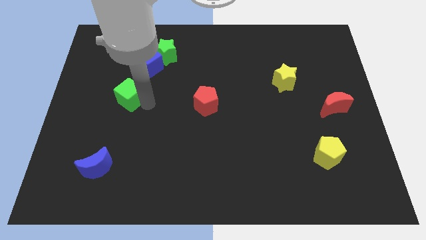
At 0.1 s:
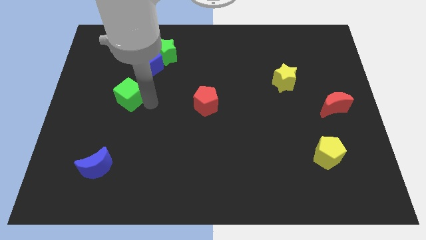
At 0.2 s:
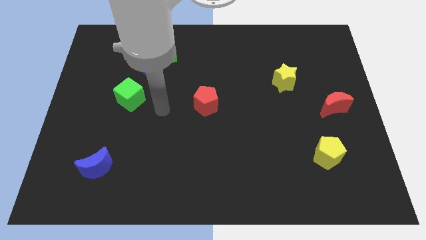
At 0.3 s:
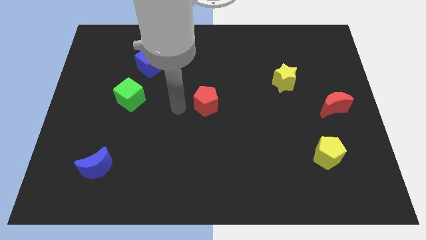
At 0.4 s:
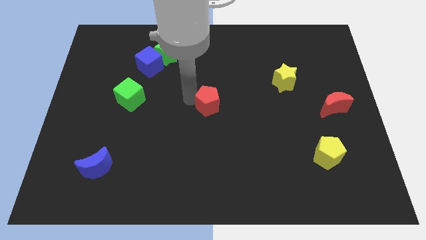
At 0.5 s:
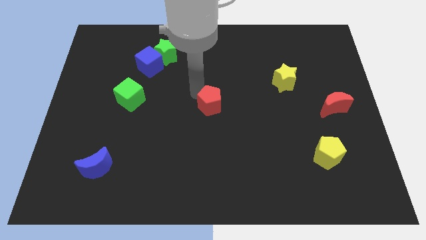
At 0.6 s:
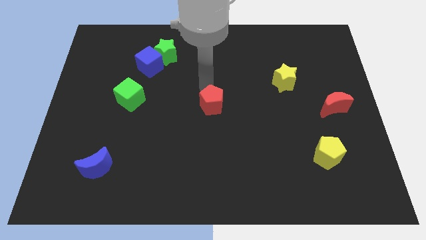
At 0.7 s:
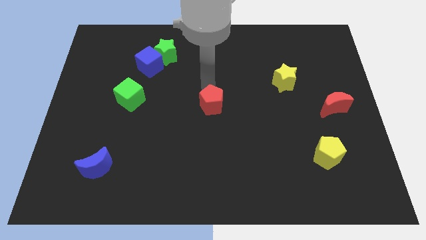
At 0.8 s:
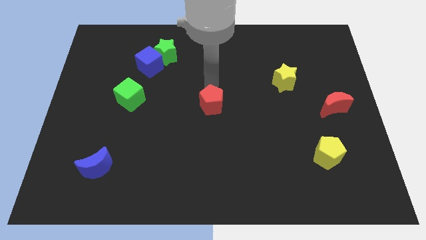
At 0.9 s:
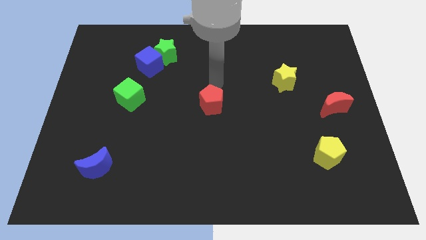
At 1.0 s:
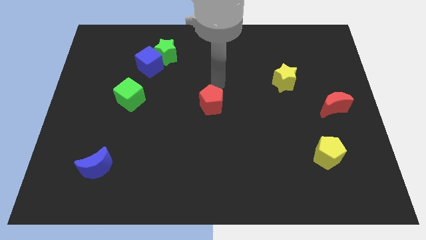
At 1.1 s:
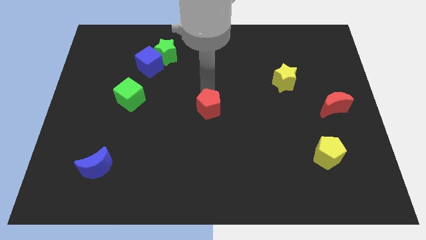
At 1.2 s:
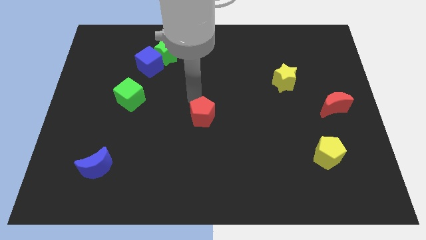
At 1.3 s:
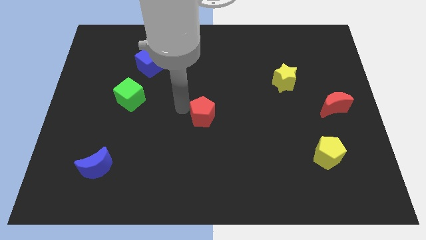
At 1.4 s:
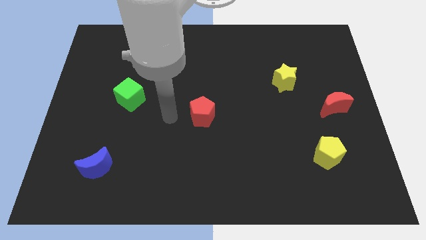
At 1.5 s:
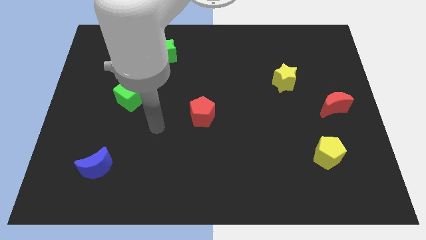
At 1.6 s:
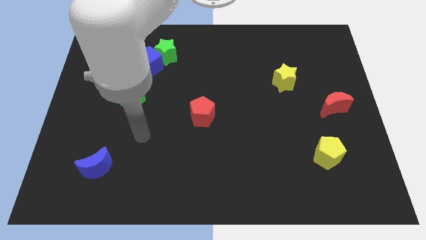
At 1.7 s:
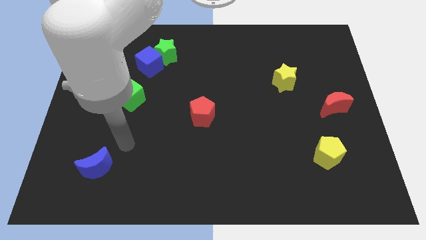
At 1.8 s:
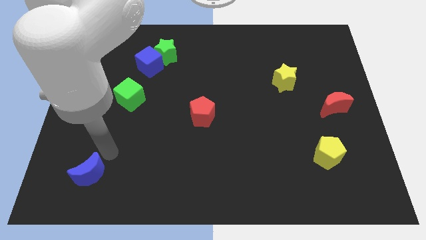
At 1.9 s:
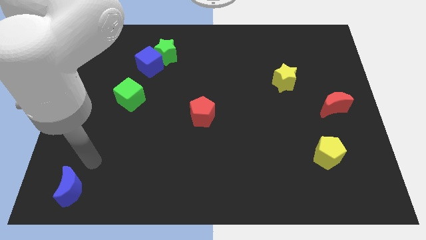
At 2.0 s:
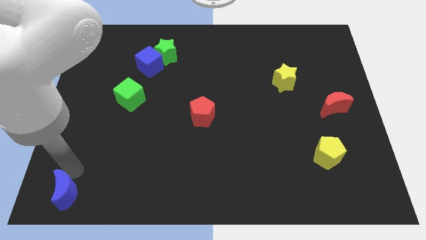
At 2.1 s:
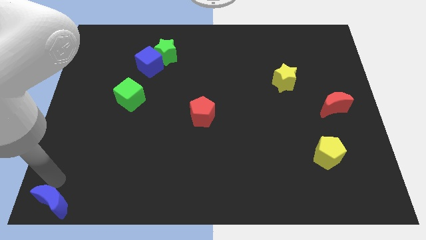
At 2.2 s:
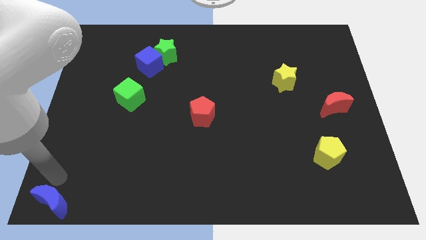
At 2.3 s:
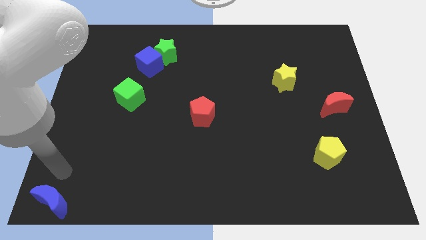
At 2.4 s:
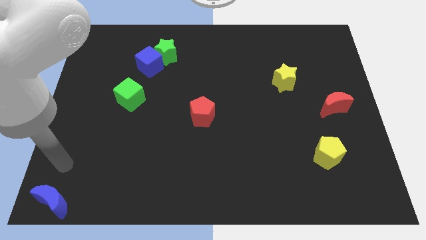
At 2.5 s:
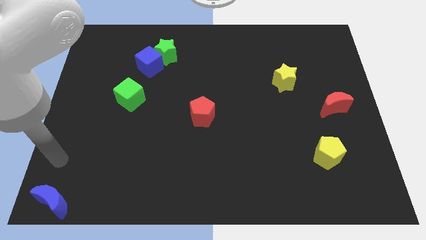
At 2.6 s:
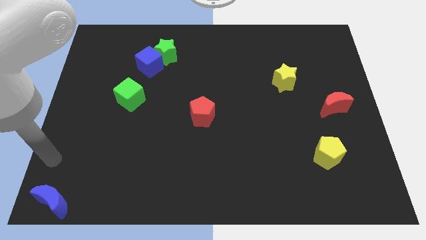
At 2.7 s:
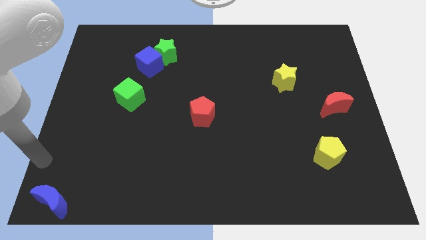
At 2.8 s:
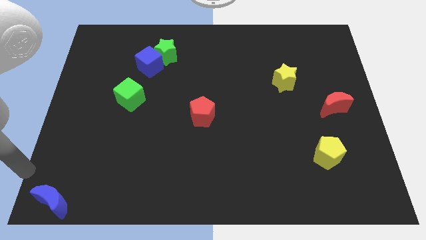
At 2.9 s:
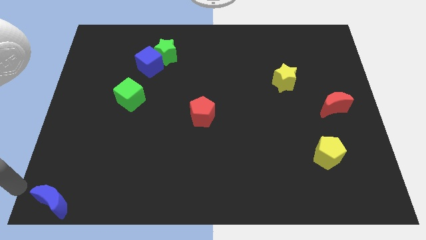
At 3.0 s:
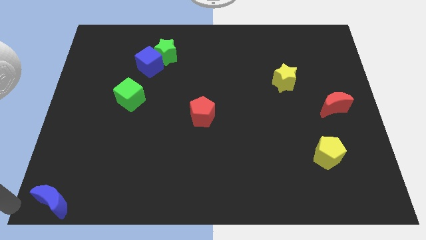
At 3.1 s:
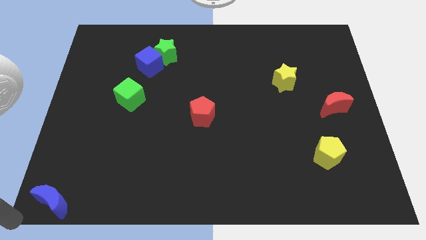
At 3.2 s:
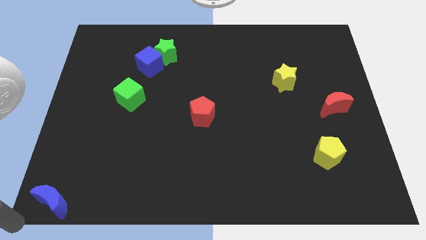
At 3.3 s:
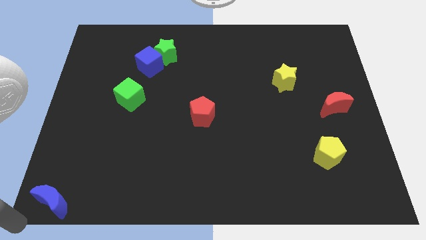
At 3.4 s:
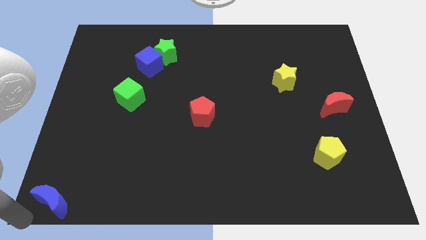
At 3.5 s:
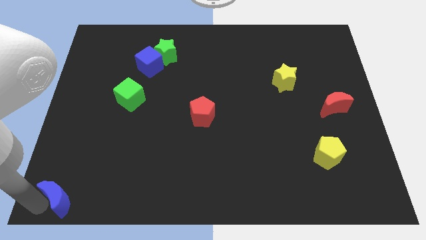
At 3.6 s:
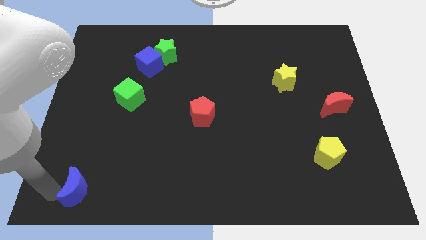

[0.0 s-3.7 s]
push the blue crescent to the bottom left corner

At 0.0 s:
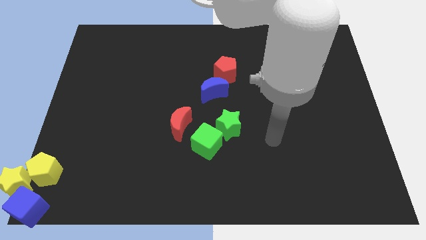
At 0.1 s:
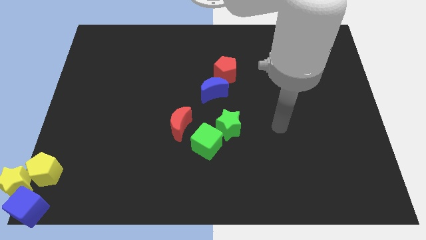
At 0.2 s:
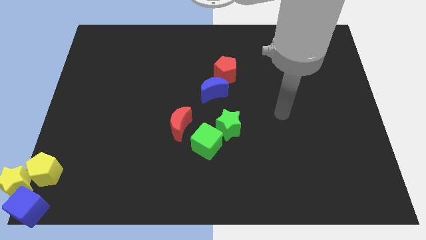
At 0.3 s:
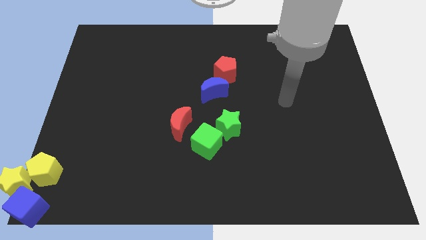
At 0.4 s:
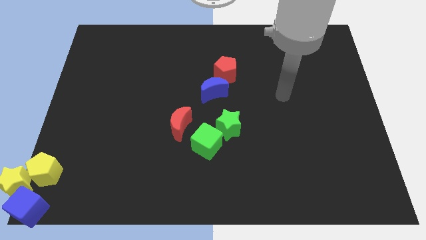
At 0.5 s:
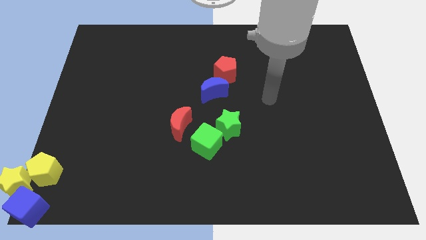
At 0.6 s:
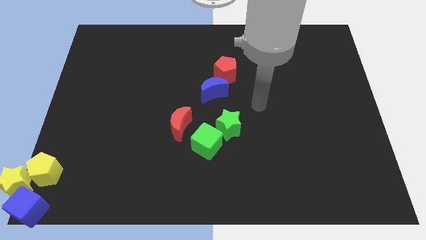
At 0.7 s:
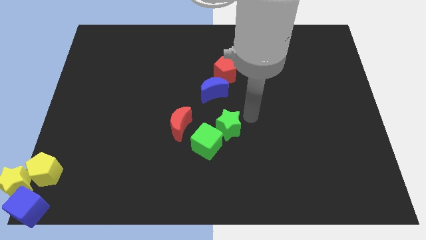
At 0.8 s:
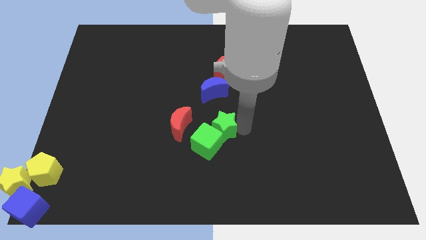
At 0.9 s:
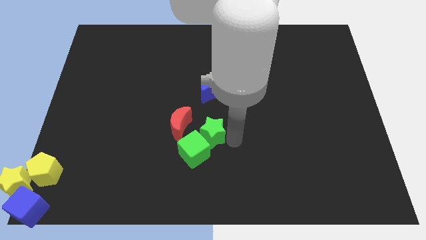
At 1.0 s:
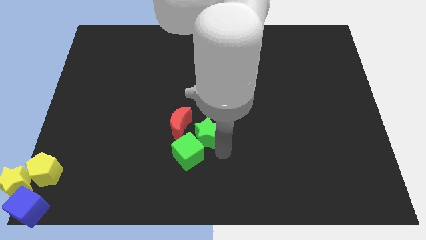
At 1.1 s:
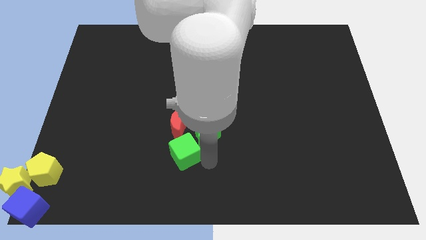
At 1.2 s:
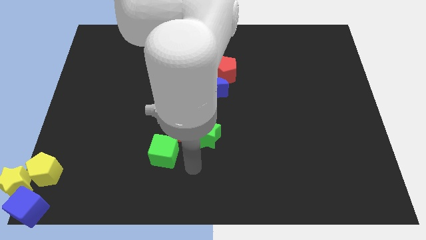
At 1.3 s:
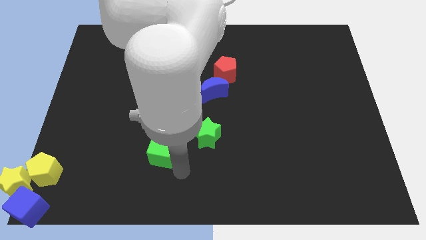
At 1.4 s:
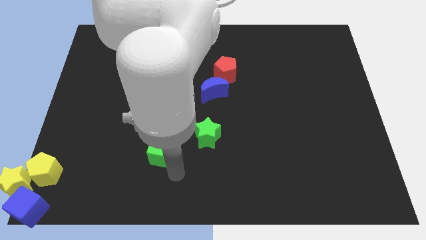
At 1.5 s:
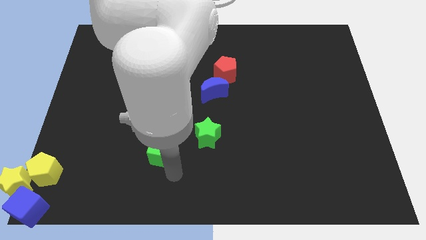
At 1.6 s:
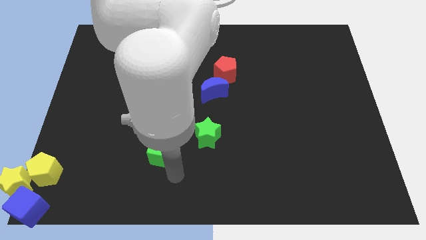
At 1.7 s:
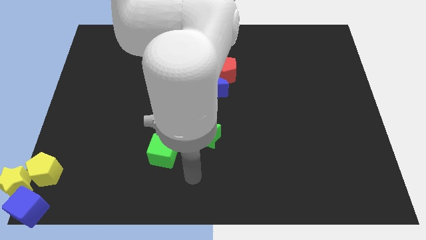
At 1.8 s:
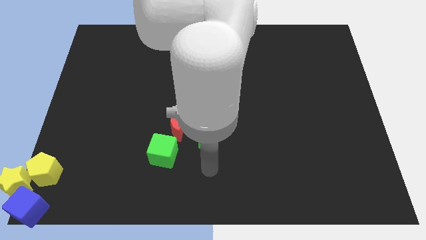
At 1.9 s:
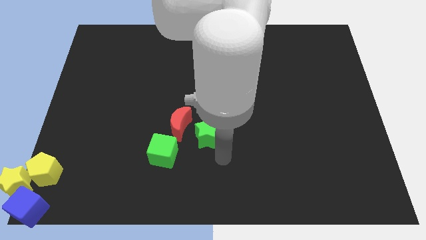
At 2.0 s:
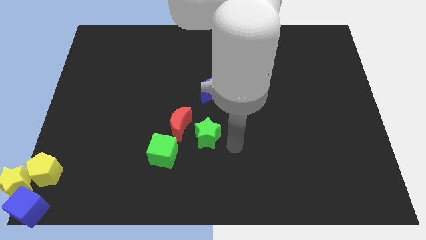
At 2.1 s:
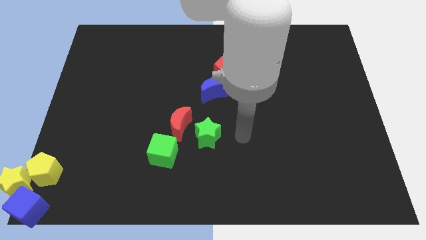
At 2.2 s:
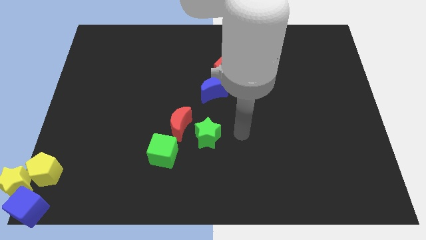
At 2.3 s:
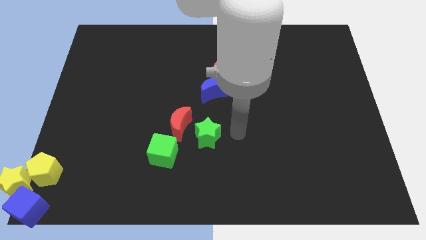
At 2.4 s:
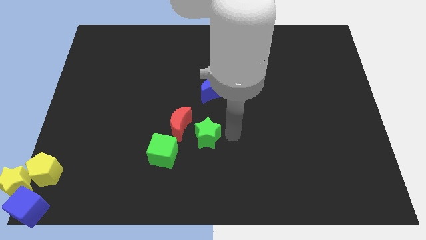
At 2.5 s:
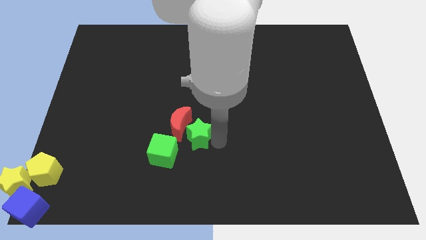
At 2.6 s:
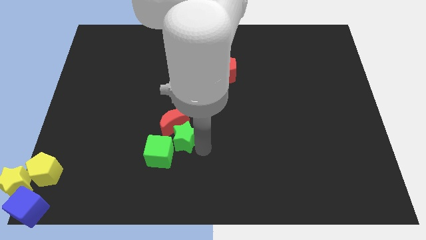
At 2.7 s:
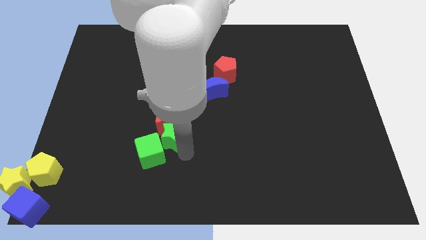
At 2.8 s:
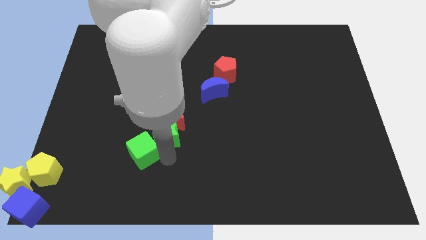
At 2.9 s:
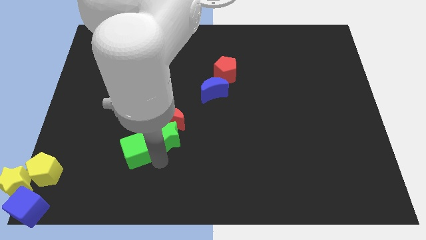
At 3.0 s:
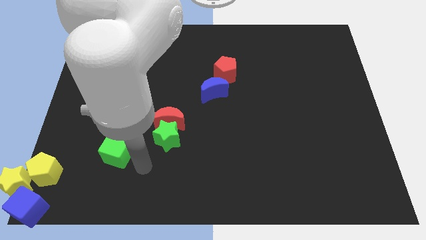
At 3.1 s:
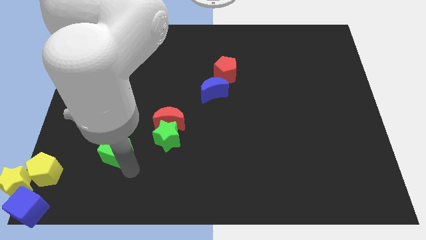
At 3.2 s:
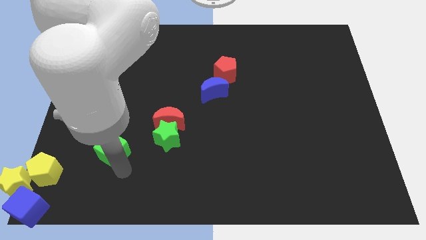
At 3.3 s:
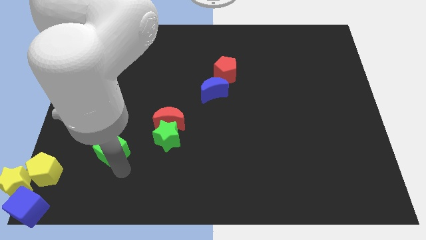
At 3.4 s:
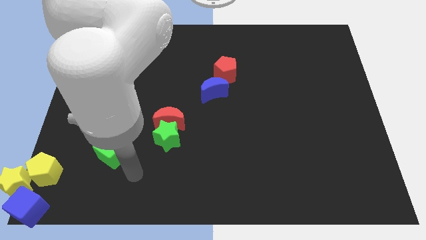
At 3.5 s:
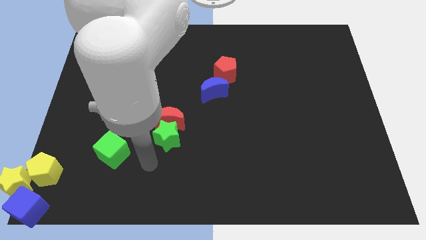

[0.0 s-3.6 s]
push the green cube between the yellow pentagon and green star

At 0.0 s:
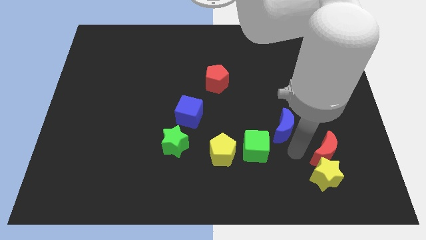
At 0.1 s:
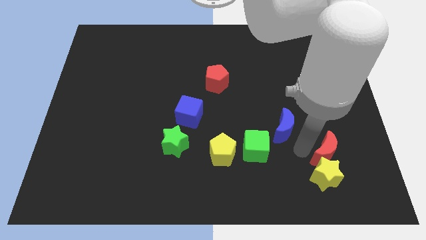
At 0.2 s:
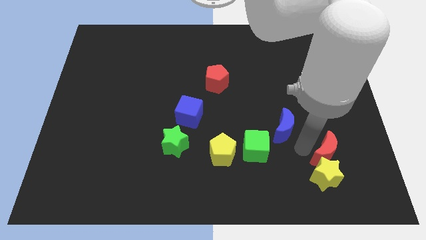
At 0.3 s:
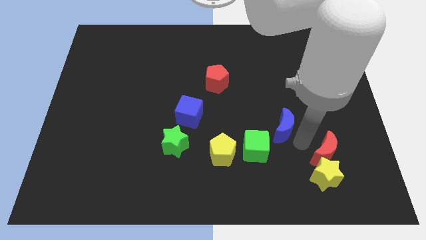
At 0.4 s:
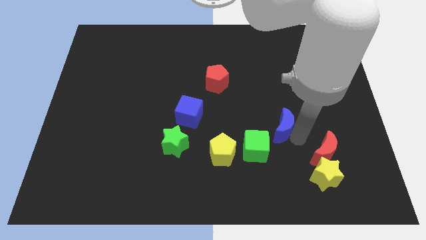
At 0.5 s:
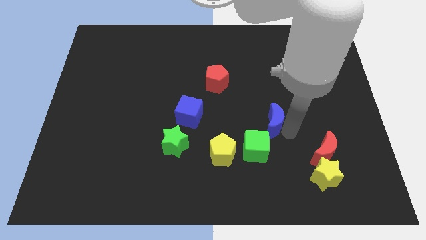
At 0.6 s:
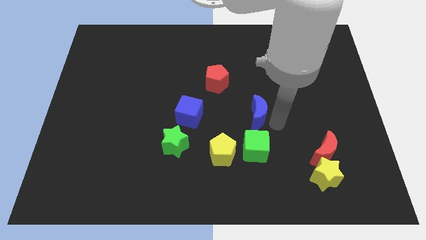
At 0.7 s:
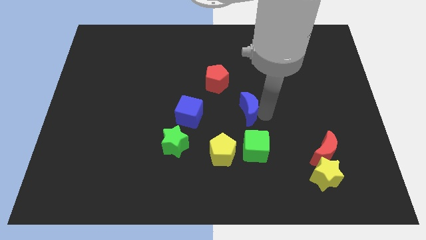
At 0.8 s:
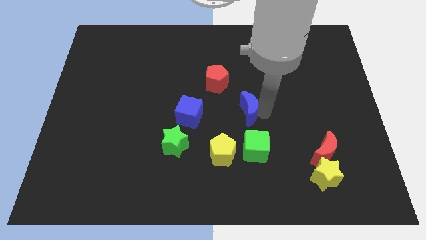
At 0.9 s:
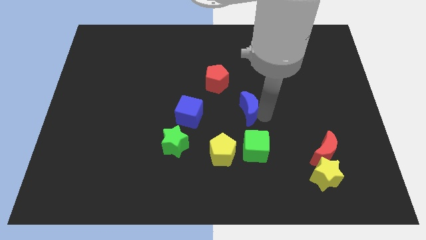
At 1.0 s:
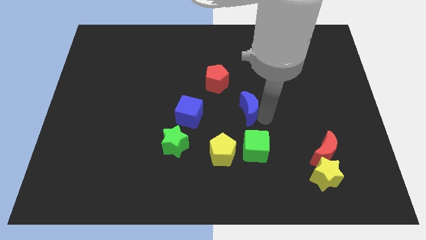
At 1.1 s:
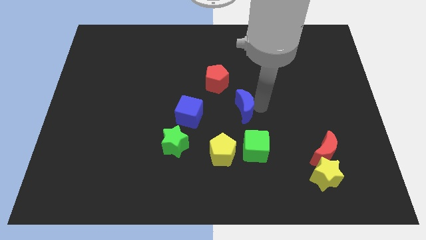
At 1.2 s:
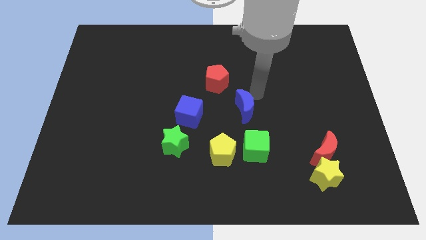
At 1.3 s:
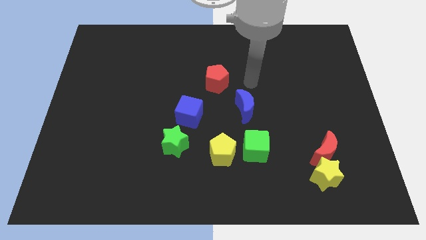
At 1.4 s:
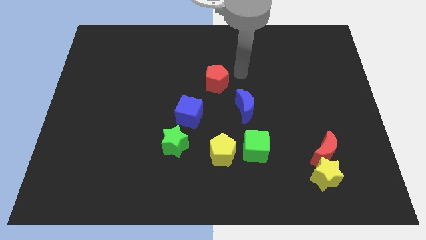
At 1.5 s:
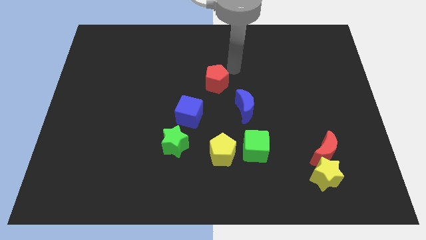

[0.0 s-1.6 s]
move the blue crescent to the bottom right of red pentagon
